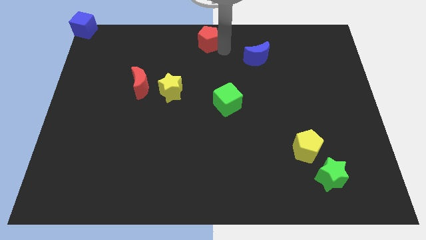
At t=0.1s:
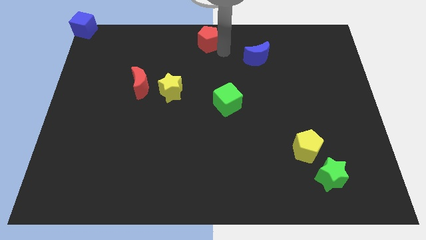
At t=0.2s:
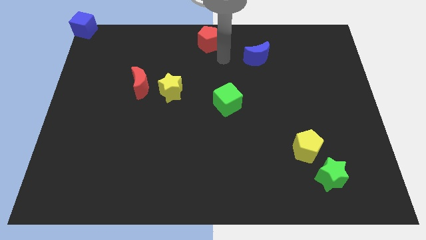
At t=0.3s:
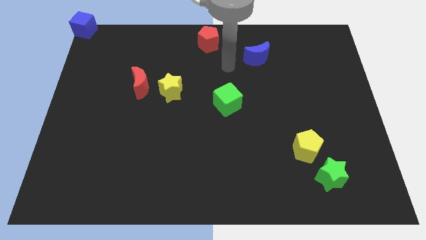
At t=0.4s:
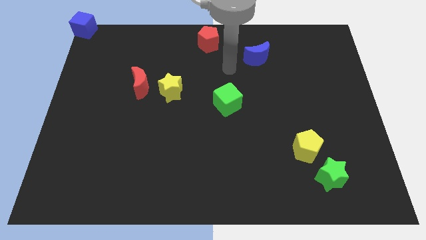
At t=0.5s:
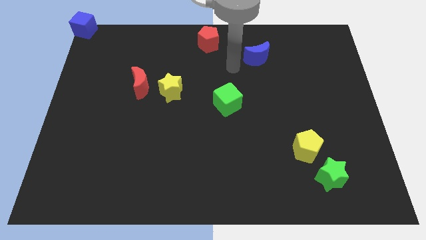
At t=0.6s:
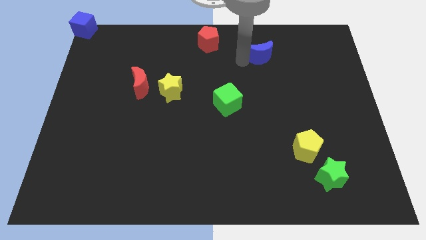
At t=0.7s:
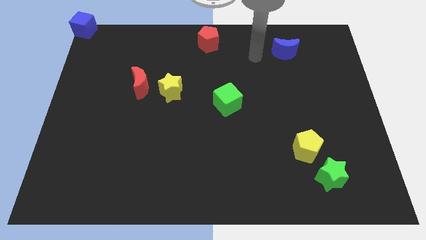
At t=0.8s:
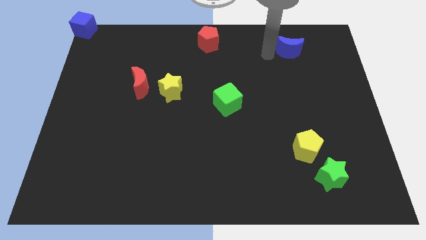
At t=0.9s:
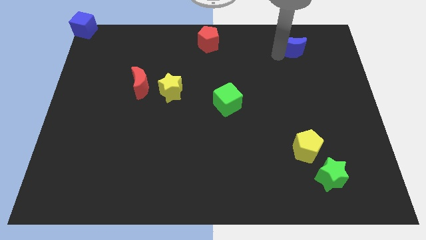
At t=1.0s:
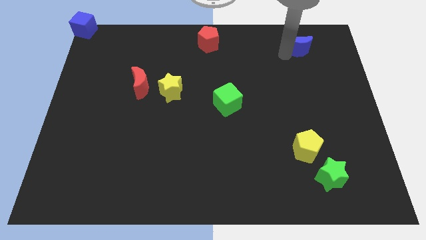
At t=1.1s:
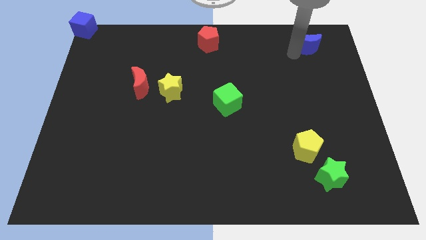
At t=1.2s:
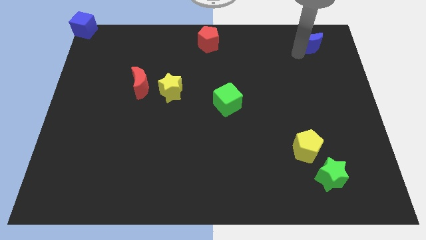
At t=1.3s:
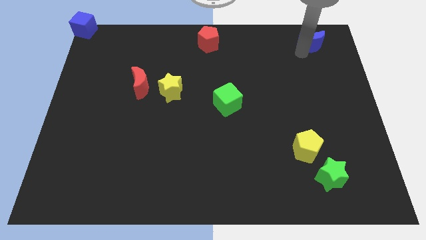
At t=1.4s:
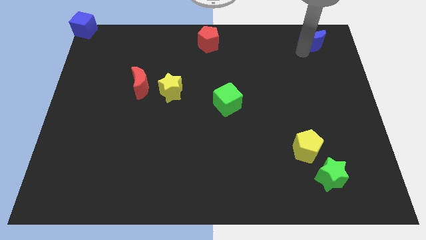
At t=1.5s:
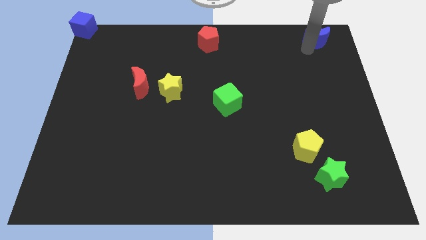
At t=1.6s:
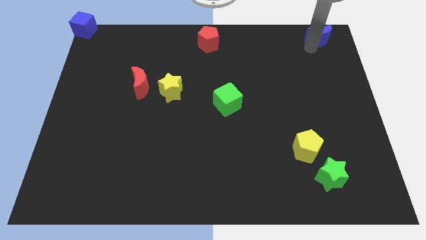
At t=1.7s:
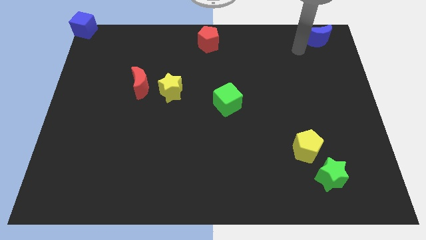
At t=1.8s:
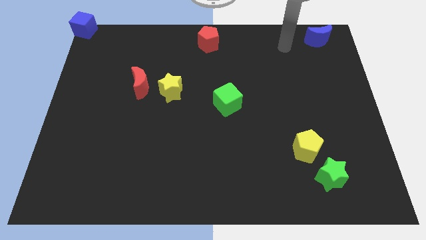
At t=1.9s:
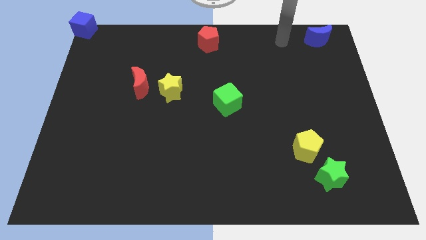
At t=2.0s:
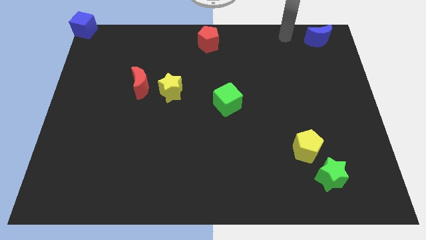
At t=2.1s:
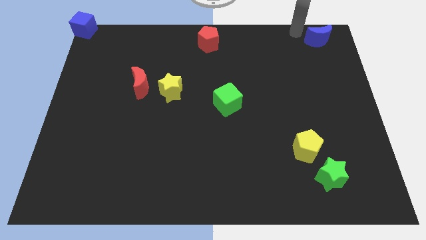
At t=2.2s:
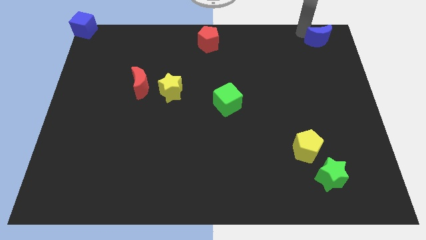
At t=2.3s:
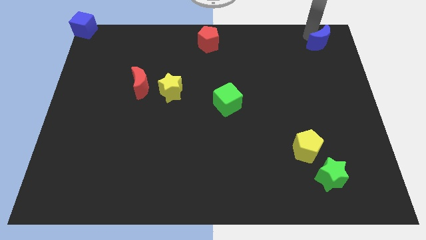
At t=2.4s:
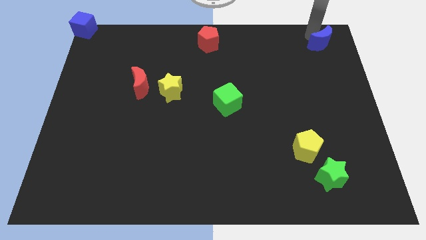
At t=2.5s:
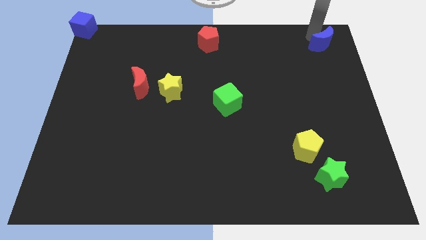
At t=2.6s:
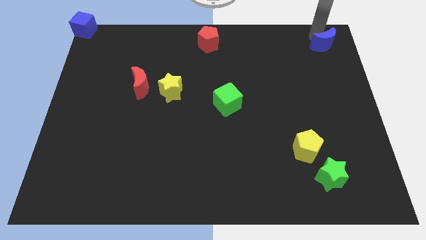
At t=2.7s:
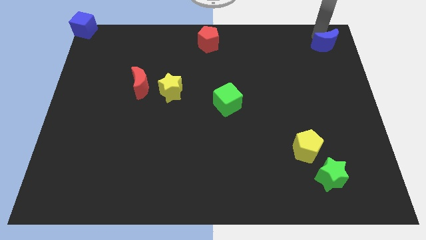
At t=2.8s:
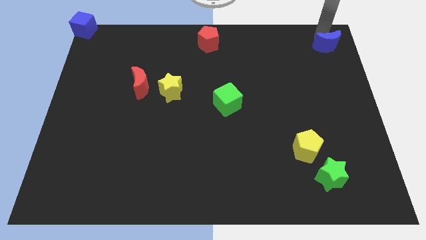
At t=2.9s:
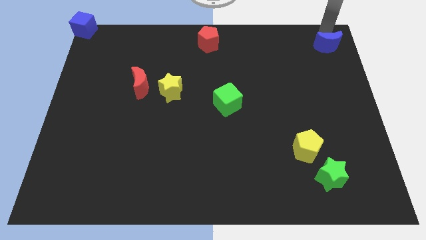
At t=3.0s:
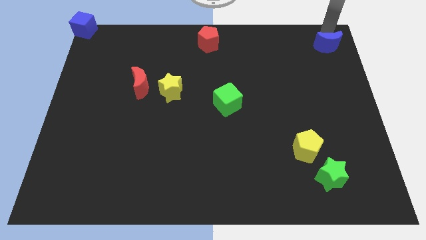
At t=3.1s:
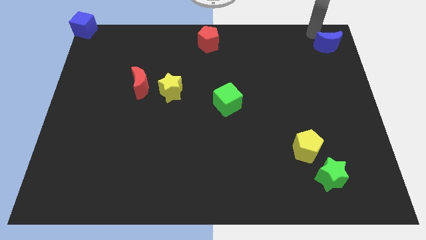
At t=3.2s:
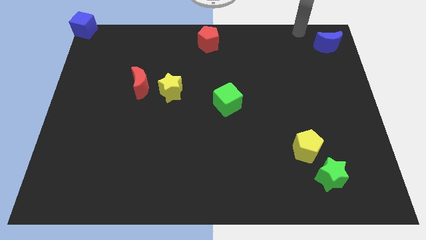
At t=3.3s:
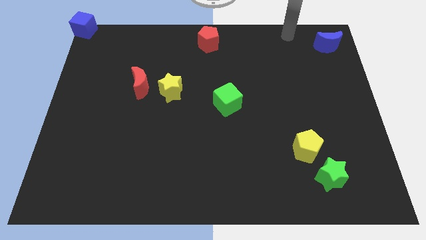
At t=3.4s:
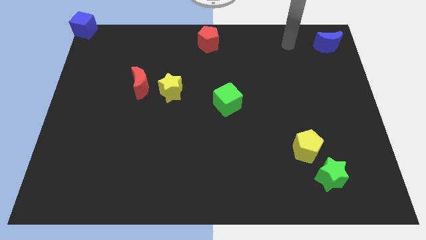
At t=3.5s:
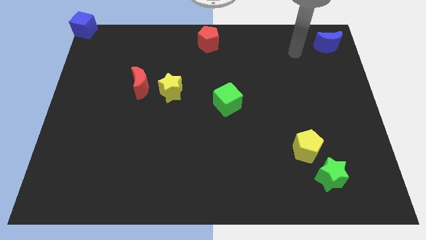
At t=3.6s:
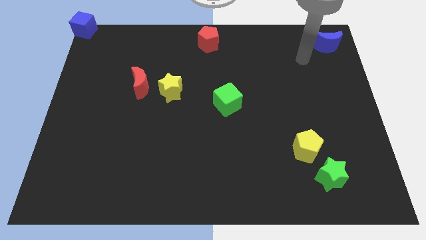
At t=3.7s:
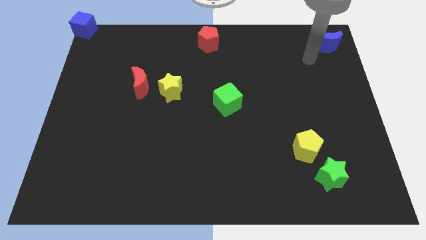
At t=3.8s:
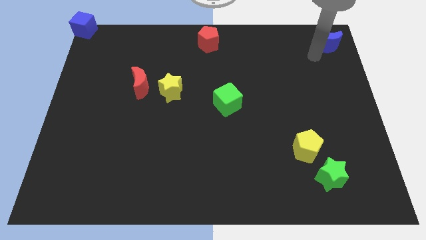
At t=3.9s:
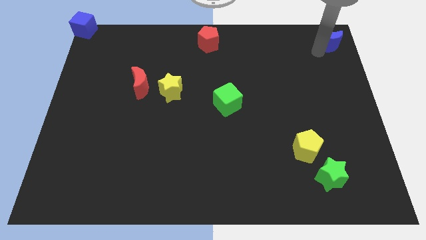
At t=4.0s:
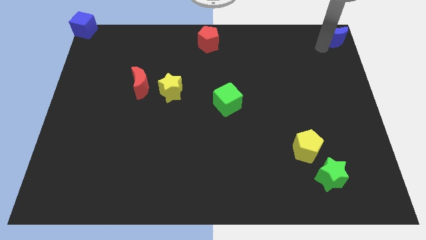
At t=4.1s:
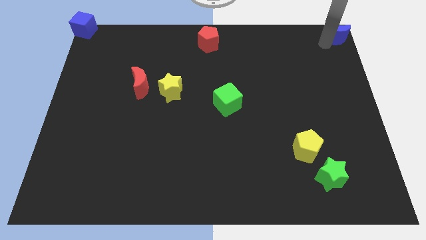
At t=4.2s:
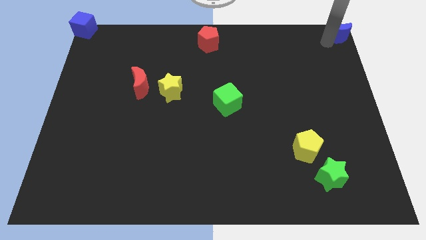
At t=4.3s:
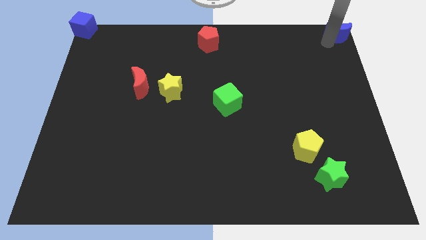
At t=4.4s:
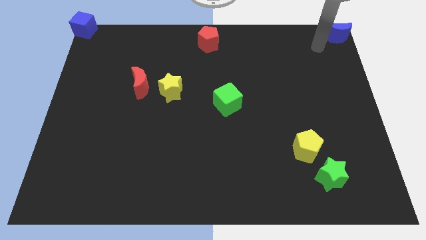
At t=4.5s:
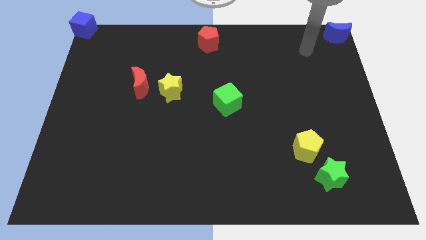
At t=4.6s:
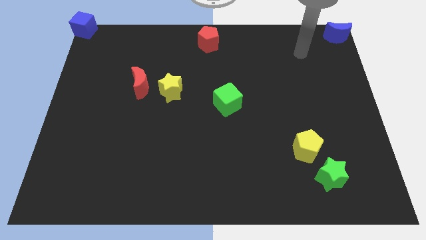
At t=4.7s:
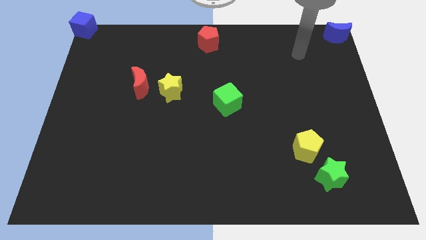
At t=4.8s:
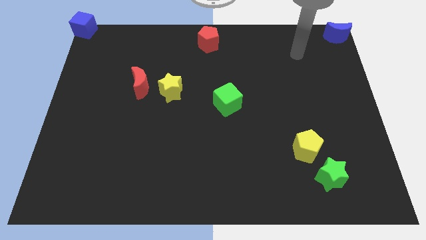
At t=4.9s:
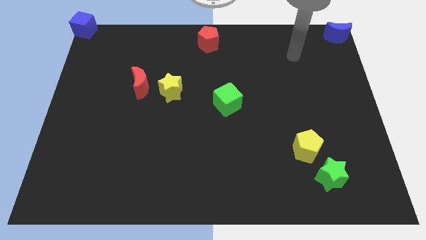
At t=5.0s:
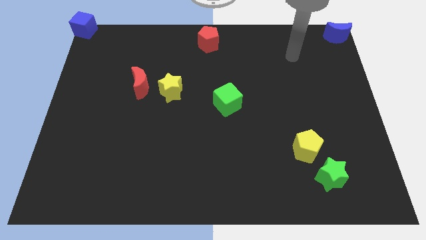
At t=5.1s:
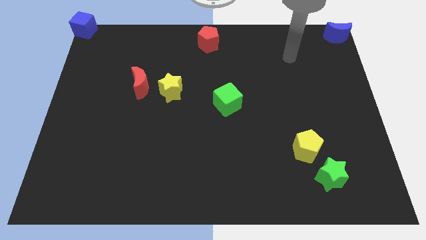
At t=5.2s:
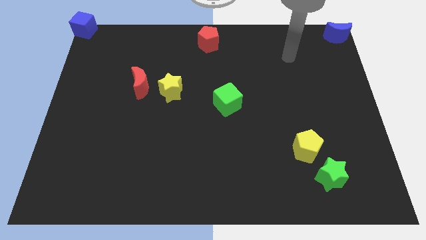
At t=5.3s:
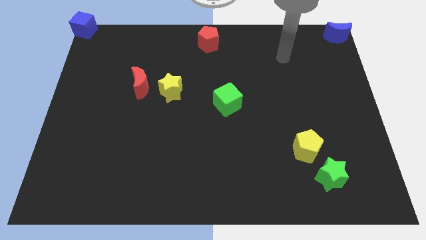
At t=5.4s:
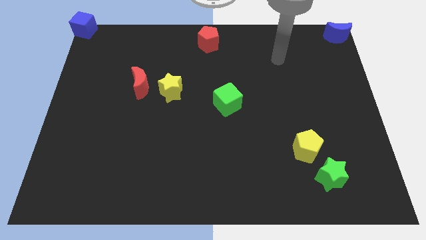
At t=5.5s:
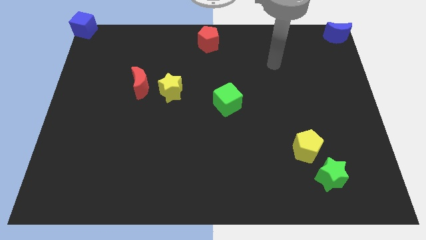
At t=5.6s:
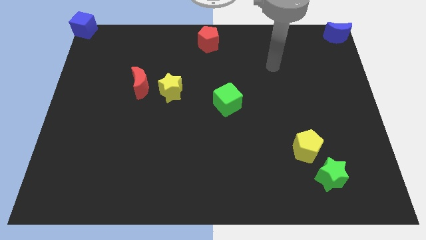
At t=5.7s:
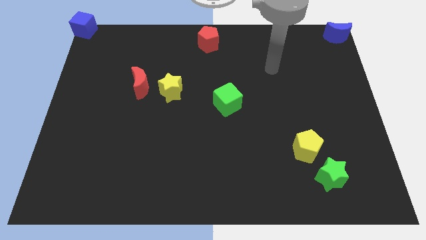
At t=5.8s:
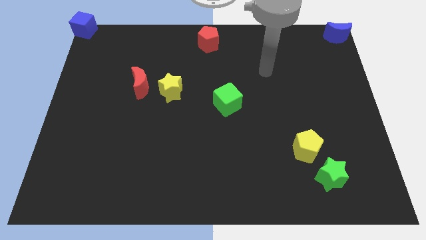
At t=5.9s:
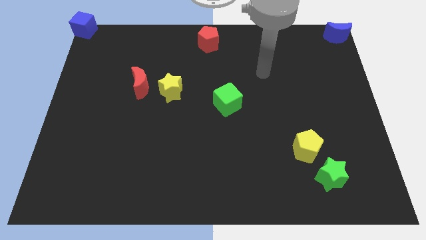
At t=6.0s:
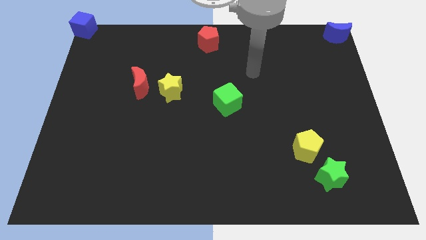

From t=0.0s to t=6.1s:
move blue moon top right of the board

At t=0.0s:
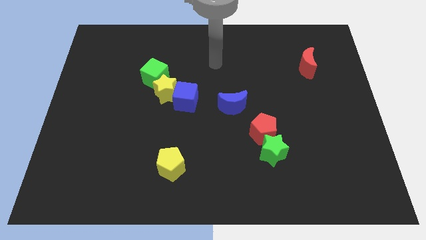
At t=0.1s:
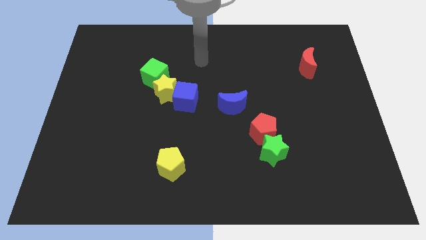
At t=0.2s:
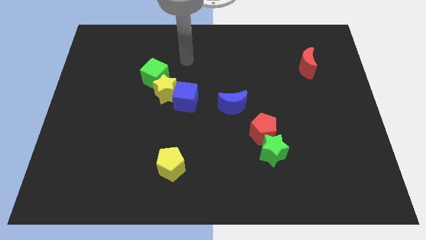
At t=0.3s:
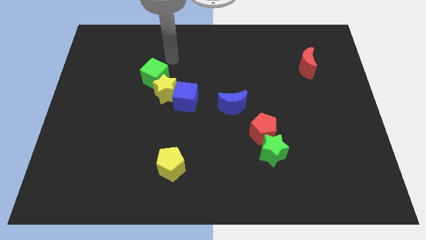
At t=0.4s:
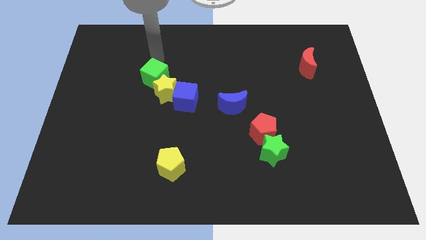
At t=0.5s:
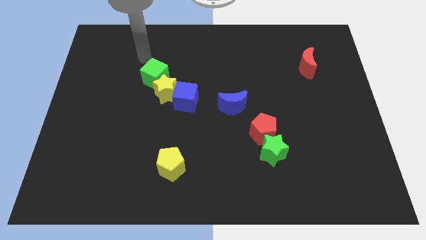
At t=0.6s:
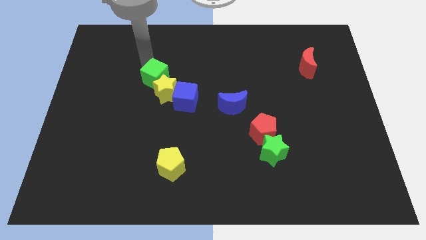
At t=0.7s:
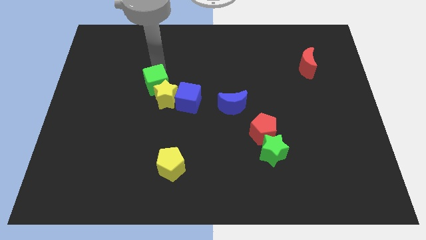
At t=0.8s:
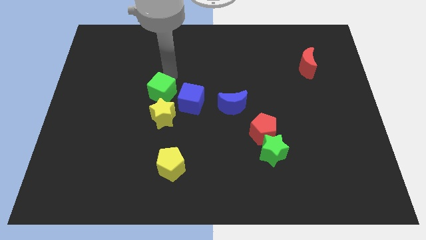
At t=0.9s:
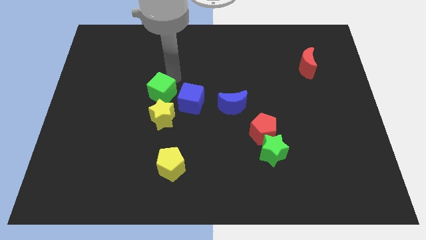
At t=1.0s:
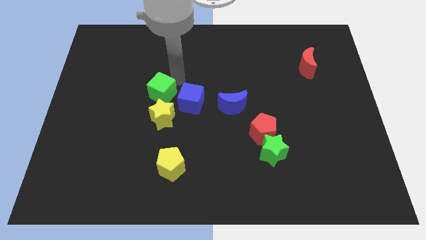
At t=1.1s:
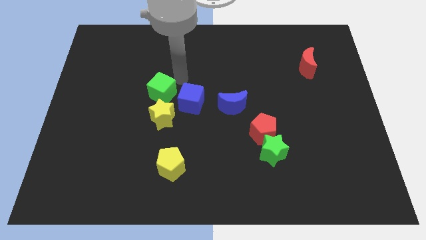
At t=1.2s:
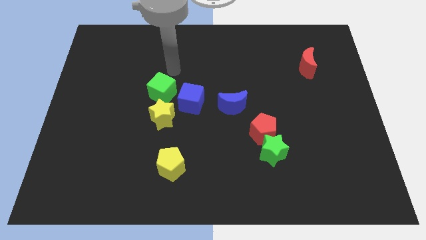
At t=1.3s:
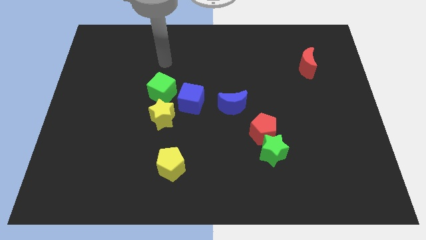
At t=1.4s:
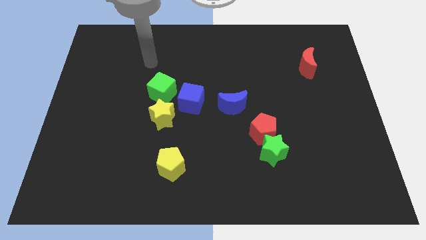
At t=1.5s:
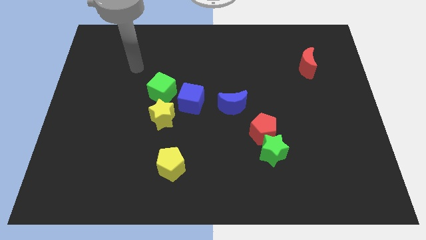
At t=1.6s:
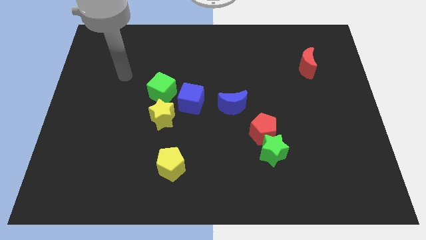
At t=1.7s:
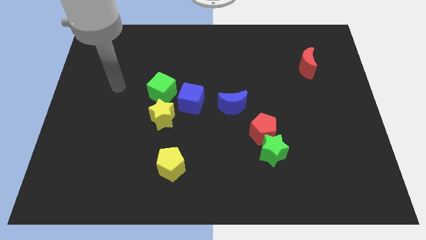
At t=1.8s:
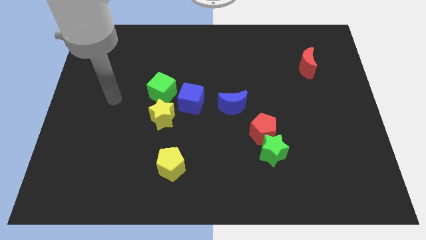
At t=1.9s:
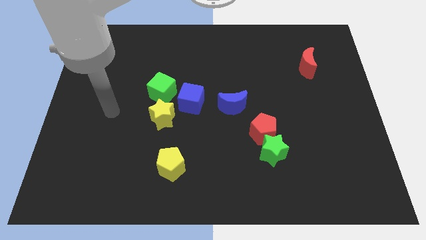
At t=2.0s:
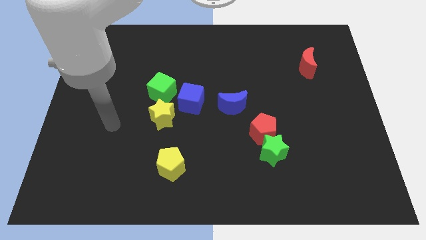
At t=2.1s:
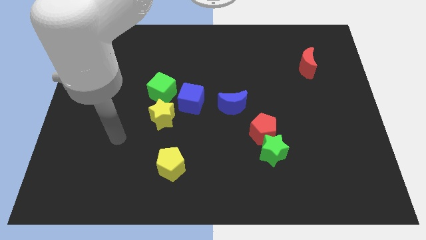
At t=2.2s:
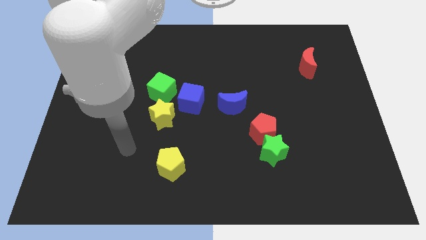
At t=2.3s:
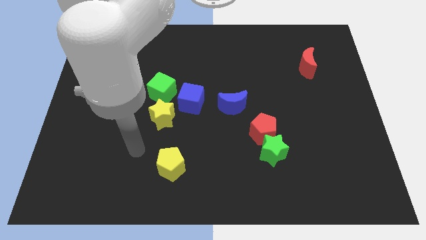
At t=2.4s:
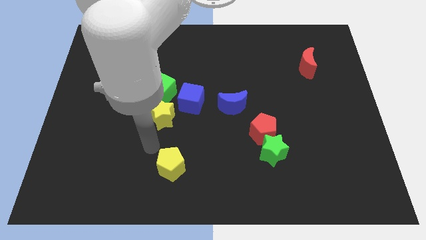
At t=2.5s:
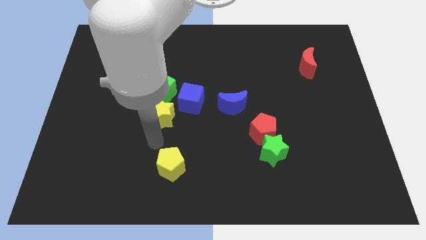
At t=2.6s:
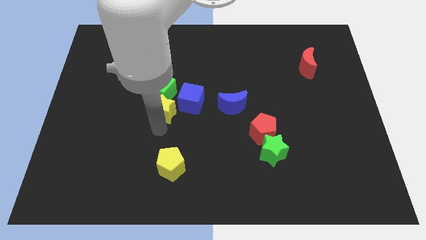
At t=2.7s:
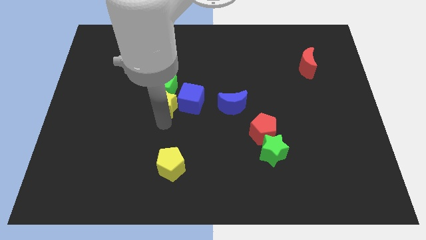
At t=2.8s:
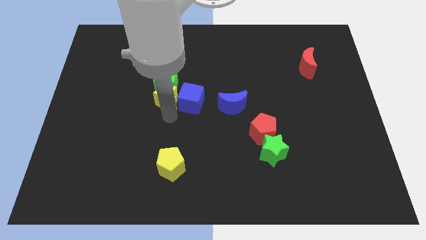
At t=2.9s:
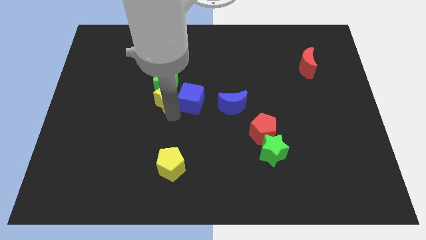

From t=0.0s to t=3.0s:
push the green cube along with yellow star
